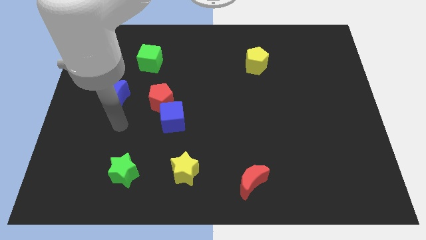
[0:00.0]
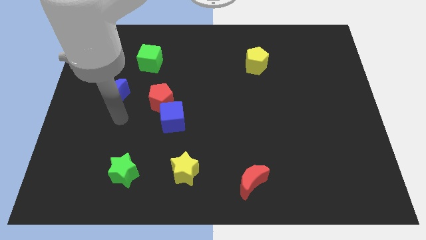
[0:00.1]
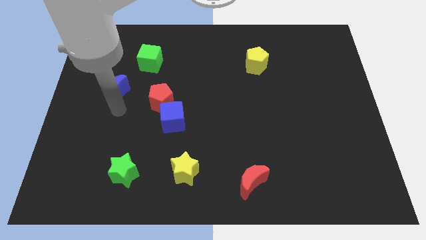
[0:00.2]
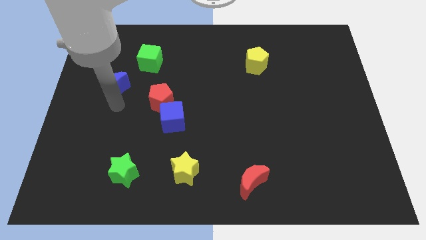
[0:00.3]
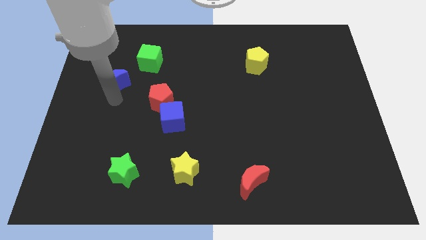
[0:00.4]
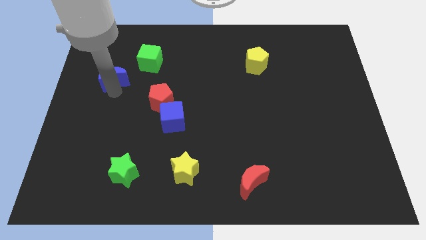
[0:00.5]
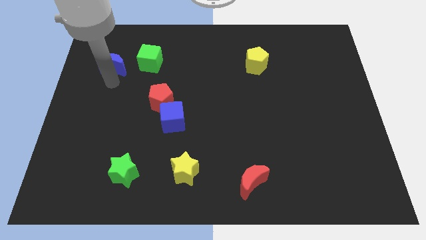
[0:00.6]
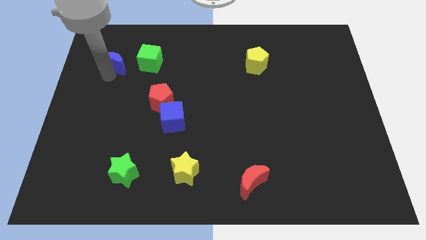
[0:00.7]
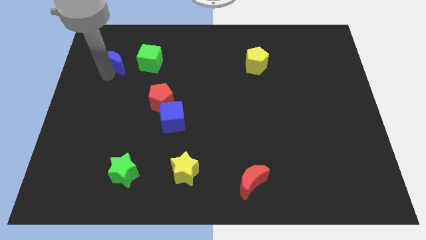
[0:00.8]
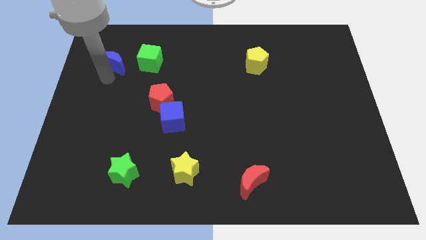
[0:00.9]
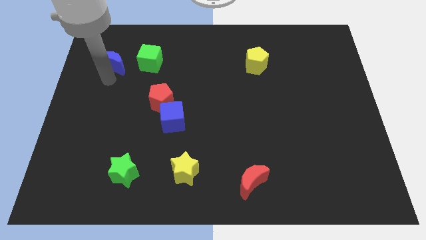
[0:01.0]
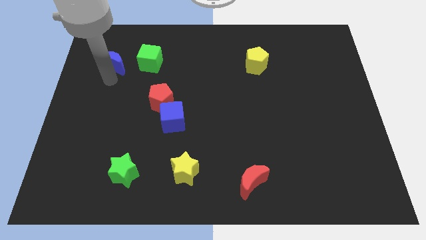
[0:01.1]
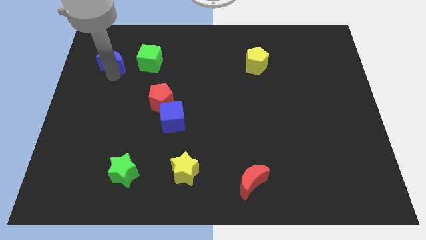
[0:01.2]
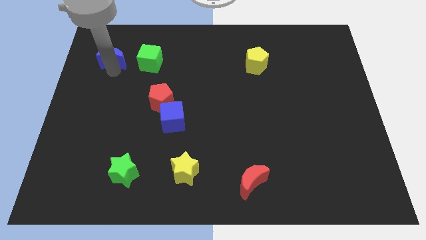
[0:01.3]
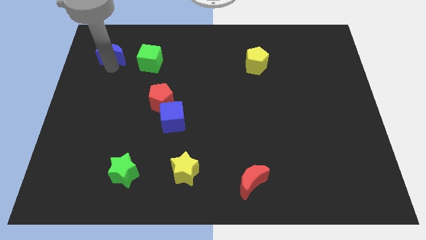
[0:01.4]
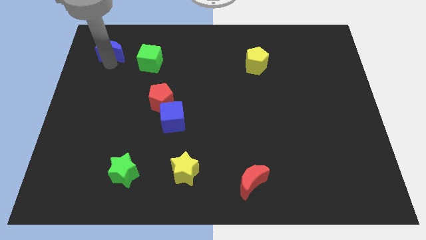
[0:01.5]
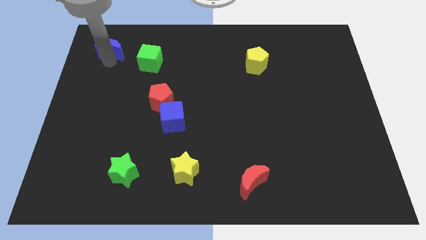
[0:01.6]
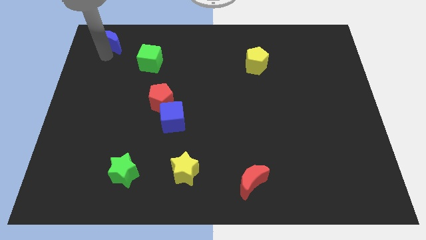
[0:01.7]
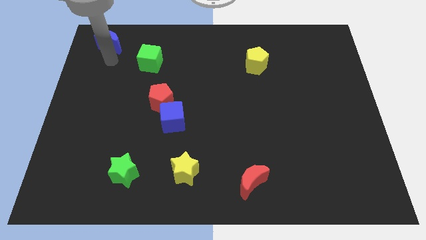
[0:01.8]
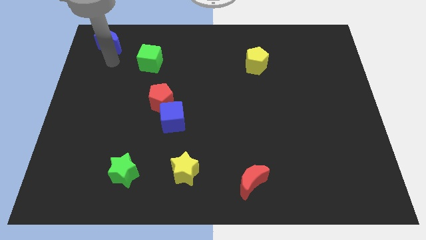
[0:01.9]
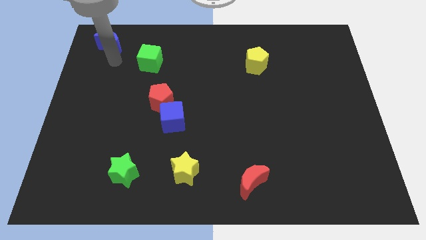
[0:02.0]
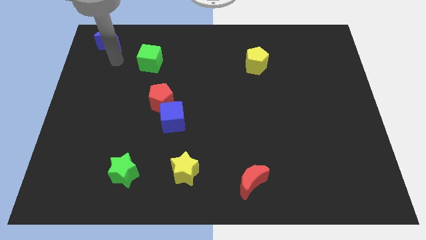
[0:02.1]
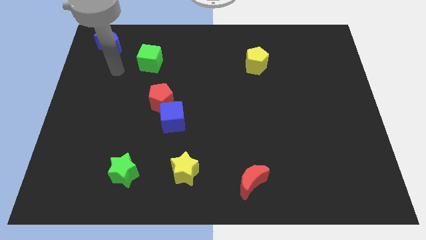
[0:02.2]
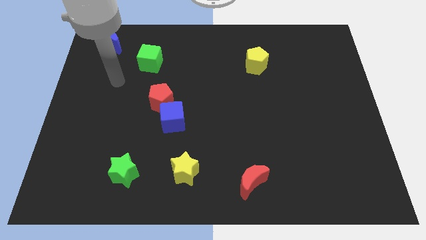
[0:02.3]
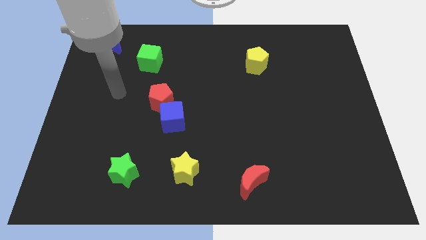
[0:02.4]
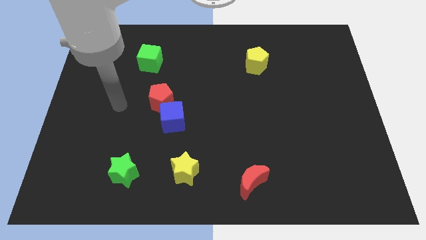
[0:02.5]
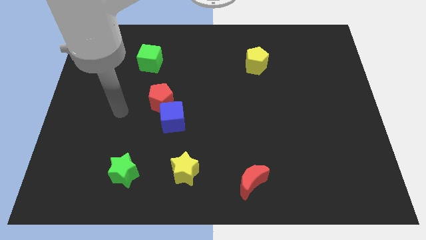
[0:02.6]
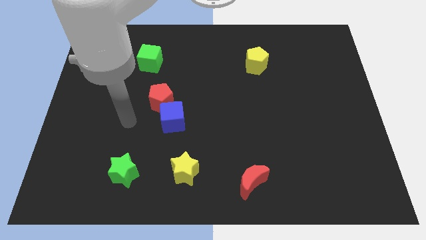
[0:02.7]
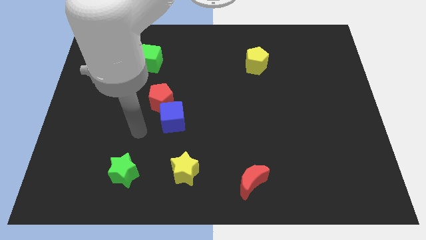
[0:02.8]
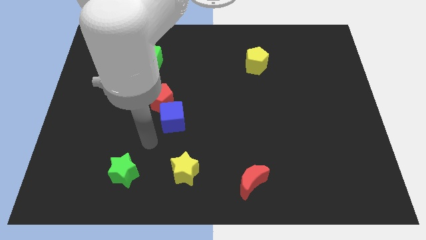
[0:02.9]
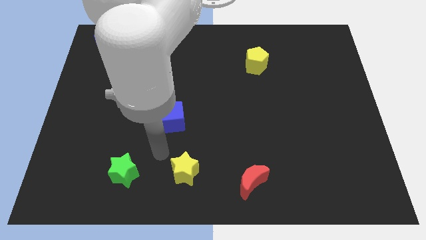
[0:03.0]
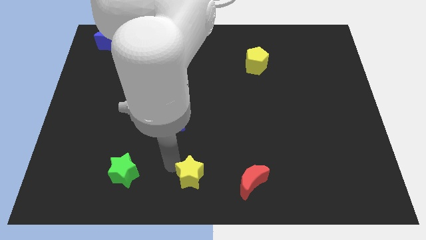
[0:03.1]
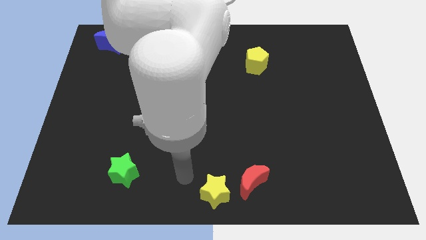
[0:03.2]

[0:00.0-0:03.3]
push the blue crescent towards the top left corner

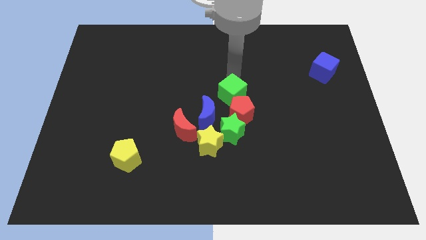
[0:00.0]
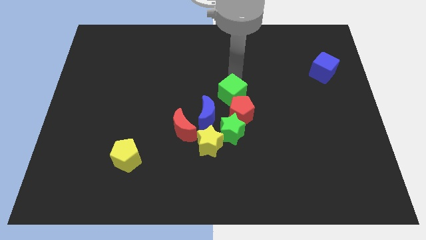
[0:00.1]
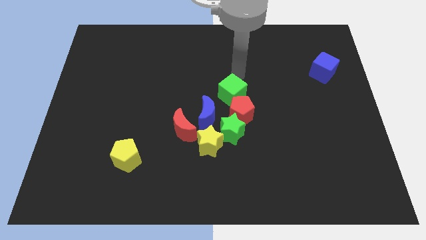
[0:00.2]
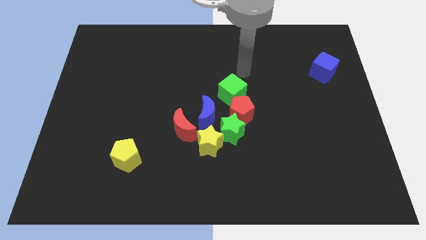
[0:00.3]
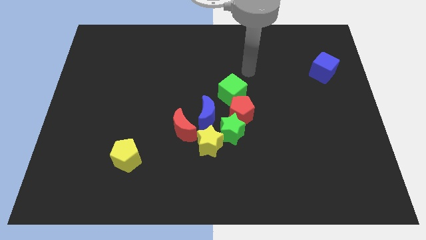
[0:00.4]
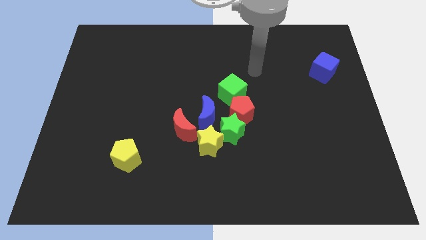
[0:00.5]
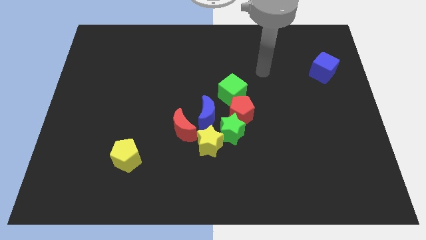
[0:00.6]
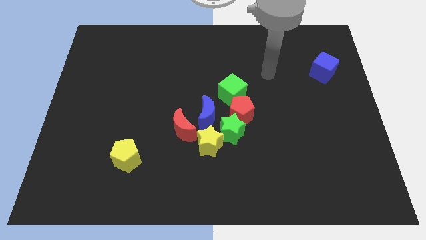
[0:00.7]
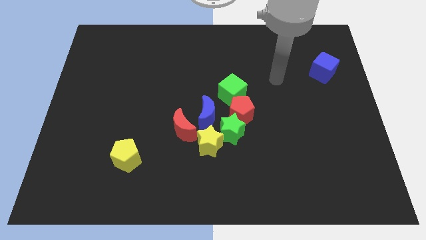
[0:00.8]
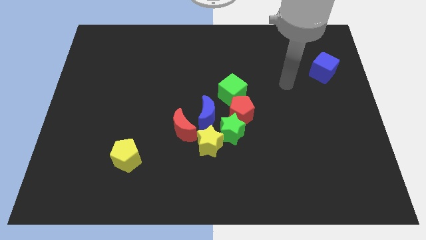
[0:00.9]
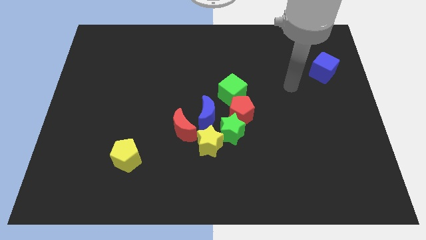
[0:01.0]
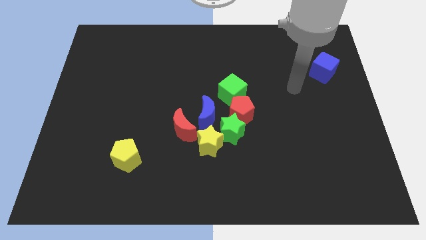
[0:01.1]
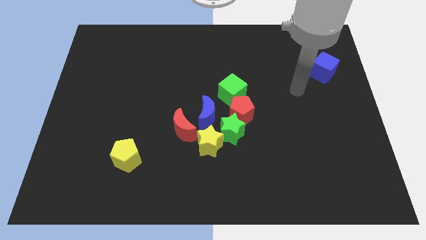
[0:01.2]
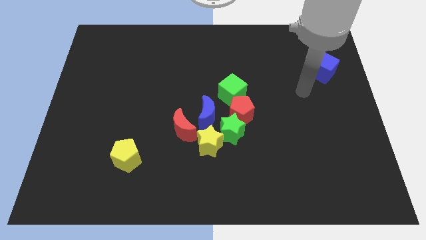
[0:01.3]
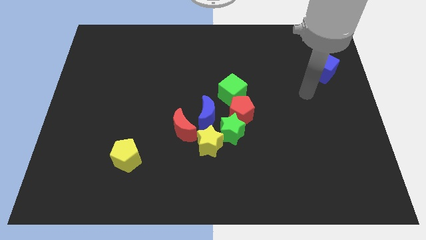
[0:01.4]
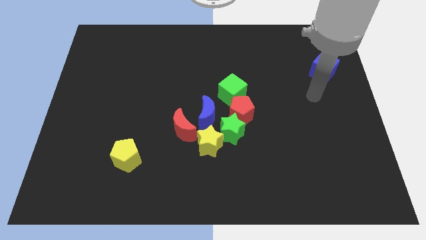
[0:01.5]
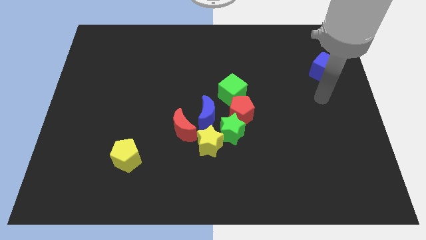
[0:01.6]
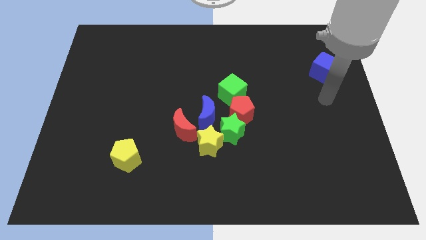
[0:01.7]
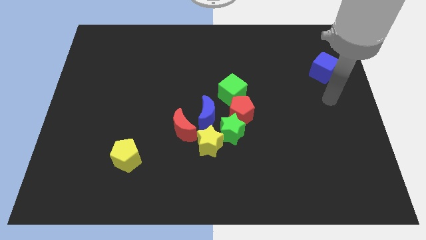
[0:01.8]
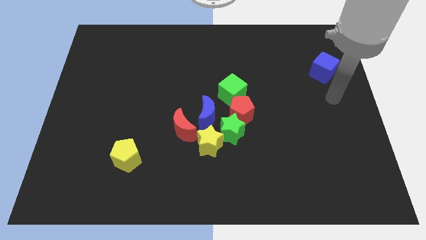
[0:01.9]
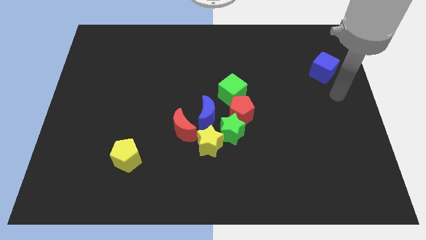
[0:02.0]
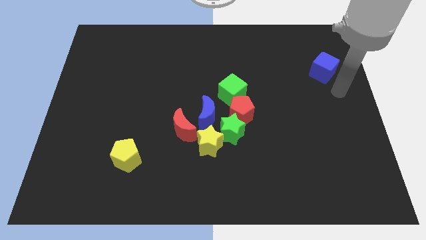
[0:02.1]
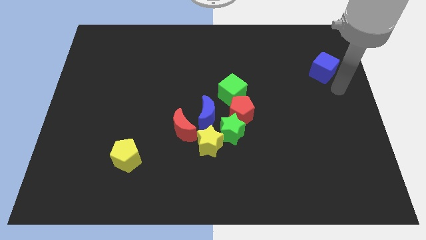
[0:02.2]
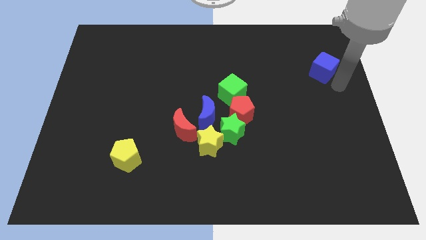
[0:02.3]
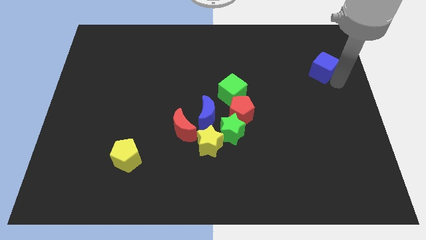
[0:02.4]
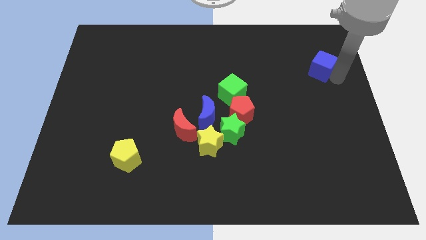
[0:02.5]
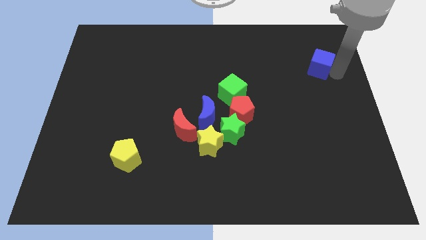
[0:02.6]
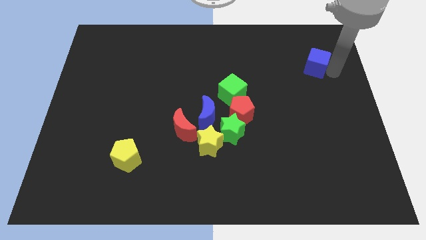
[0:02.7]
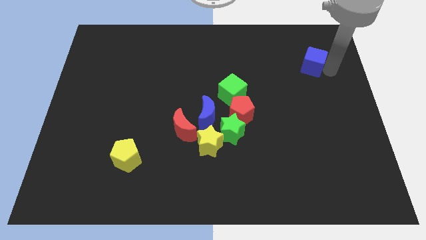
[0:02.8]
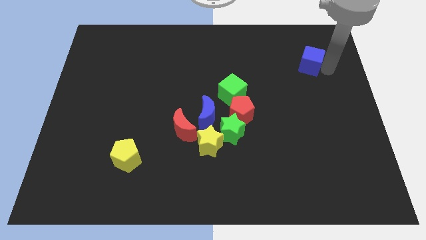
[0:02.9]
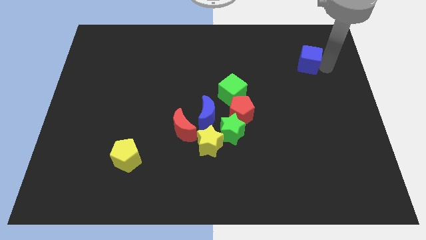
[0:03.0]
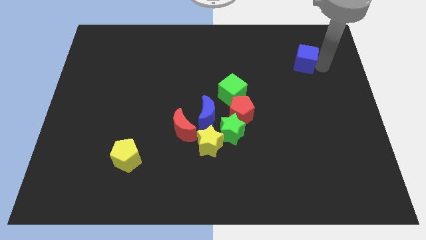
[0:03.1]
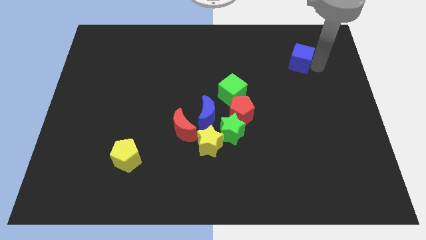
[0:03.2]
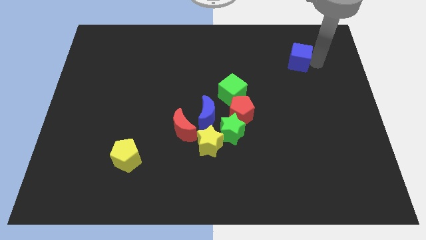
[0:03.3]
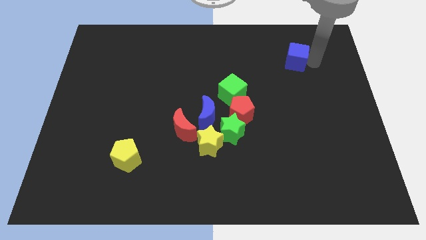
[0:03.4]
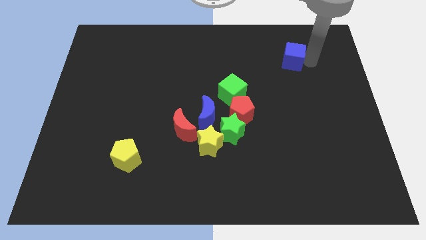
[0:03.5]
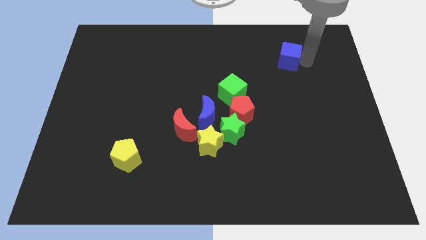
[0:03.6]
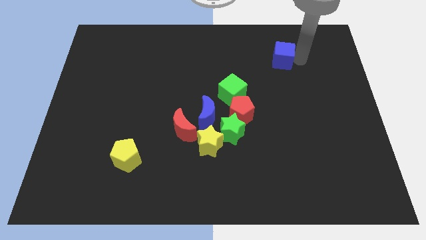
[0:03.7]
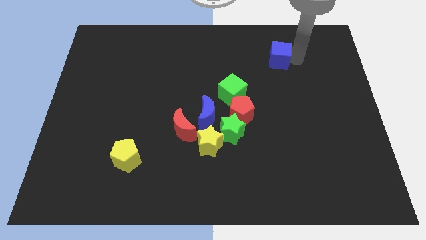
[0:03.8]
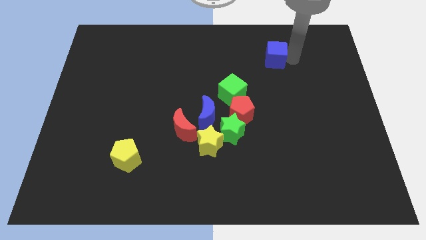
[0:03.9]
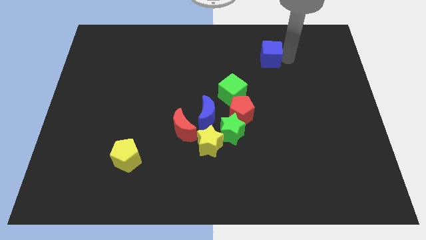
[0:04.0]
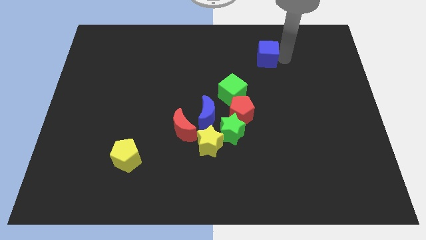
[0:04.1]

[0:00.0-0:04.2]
move the blue cube to left side of the board

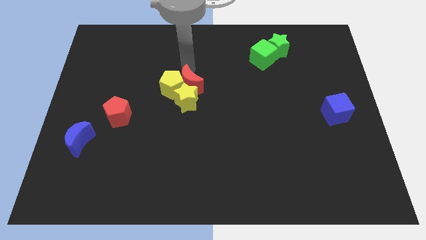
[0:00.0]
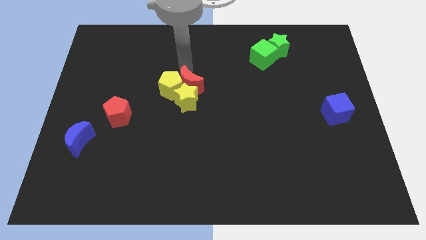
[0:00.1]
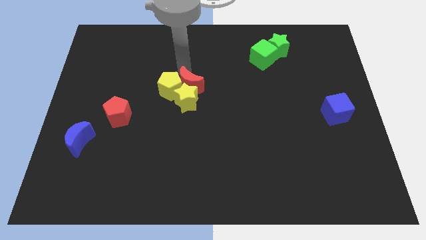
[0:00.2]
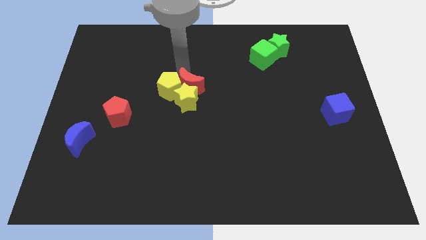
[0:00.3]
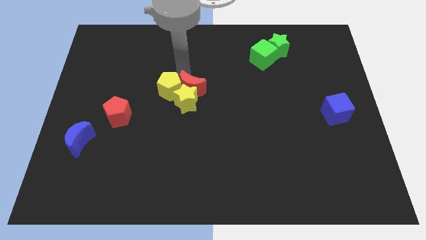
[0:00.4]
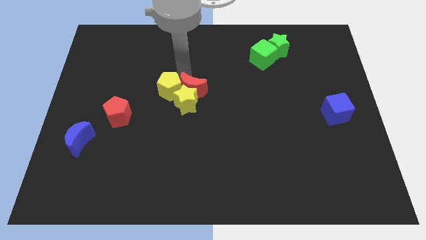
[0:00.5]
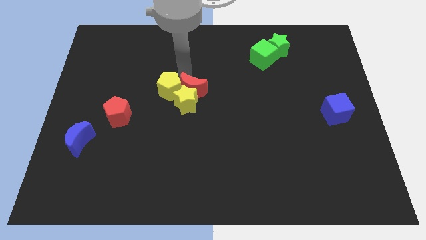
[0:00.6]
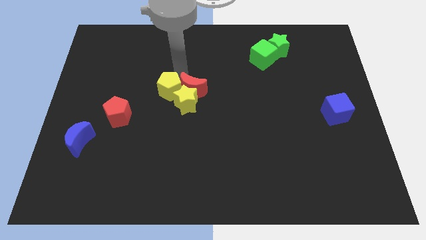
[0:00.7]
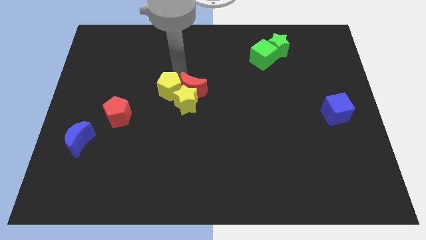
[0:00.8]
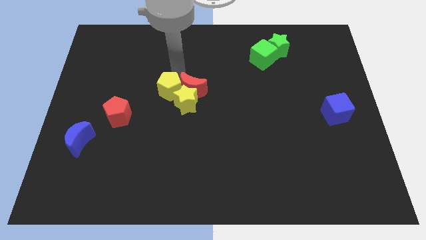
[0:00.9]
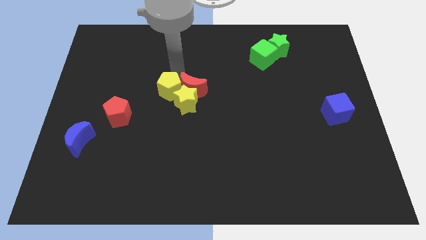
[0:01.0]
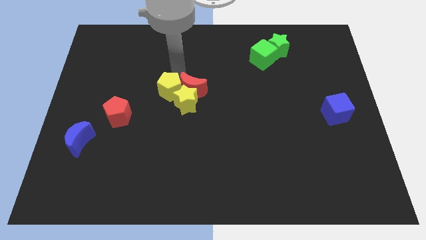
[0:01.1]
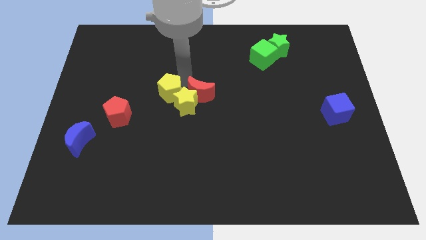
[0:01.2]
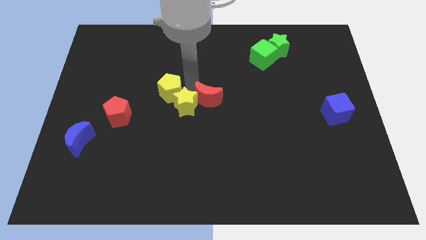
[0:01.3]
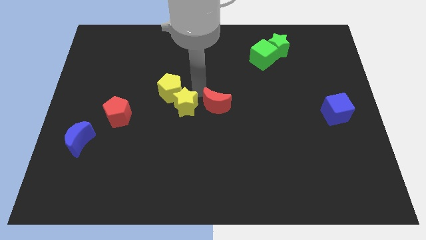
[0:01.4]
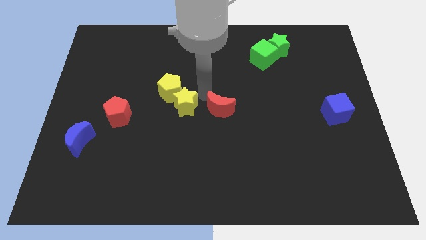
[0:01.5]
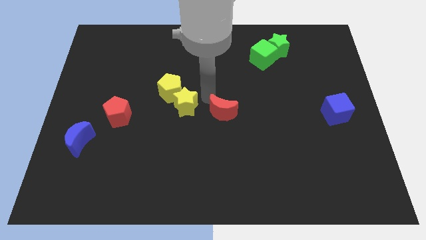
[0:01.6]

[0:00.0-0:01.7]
separate the red crescent and yellow blocks
